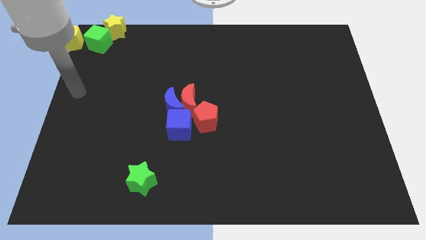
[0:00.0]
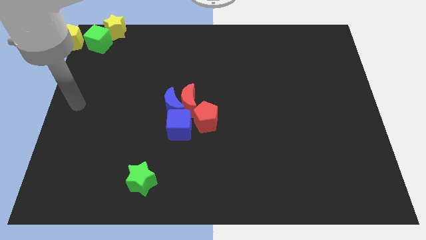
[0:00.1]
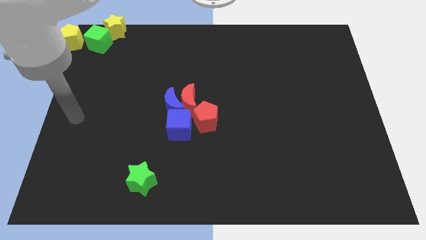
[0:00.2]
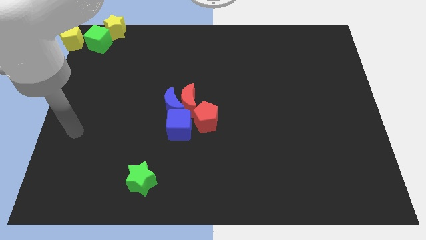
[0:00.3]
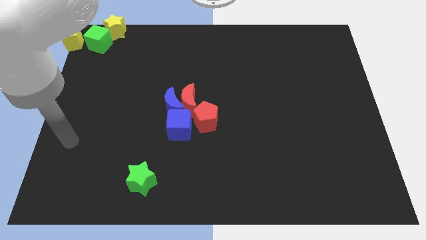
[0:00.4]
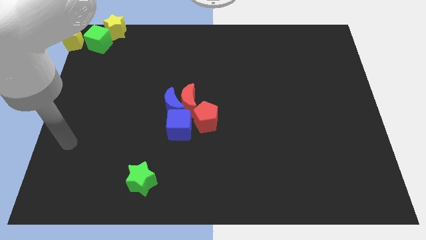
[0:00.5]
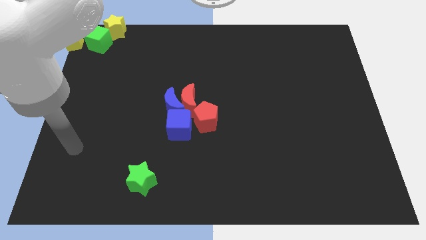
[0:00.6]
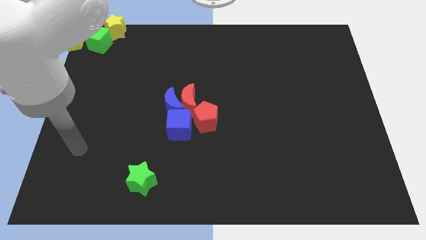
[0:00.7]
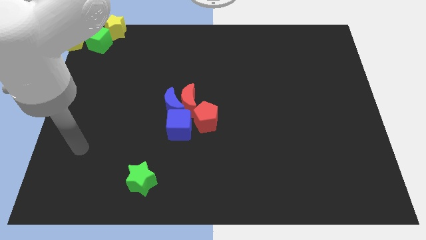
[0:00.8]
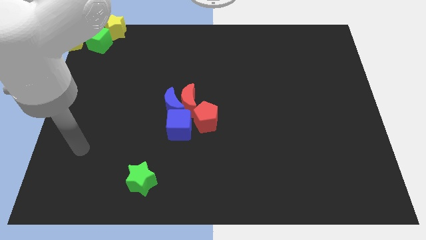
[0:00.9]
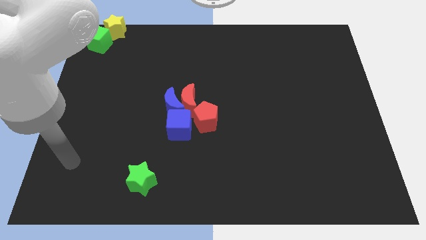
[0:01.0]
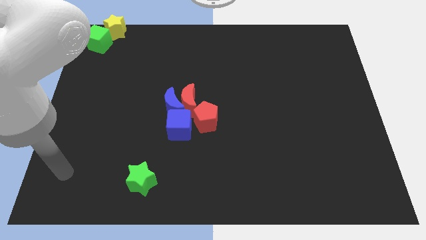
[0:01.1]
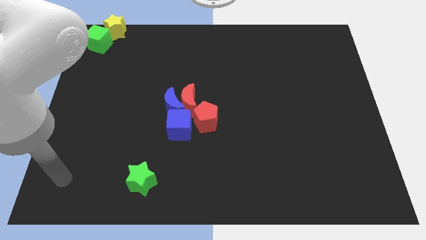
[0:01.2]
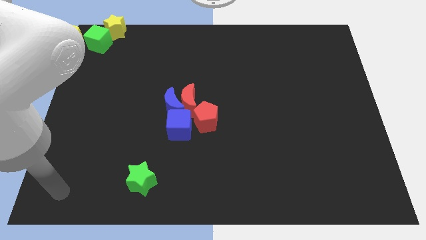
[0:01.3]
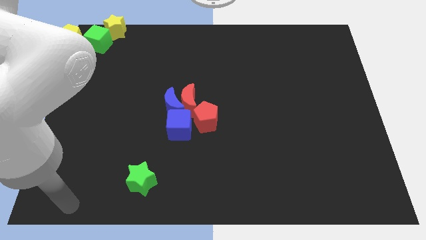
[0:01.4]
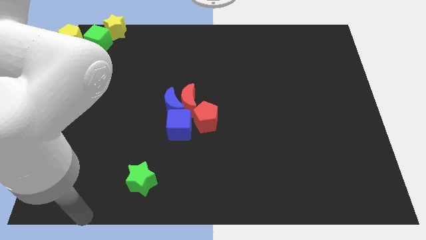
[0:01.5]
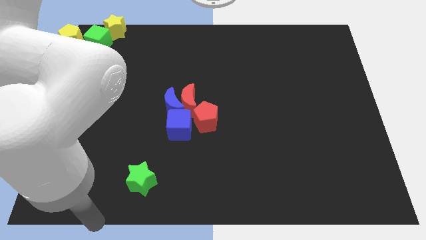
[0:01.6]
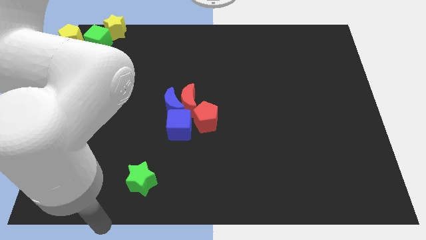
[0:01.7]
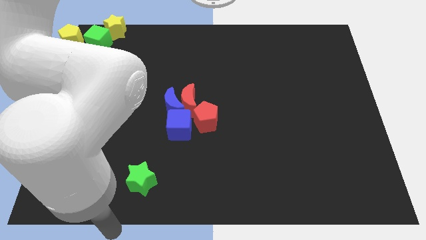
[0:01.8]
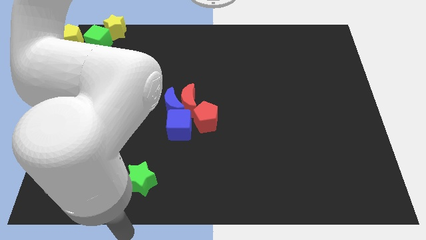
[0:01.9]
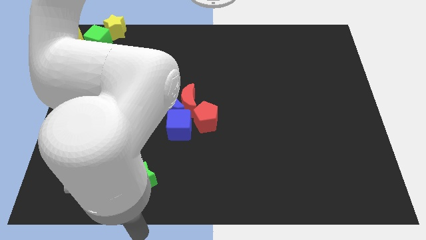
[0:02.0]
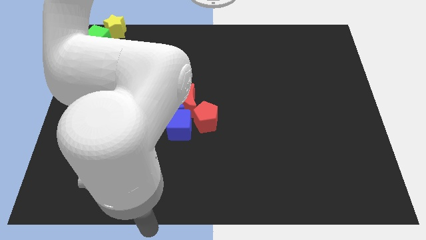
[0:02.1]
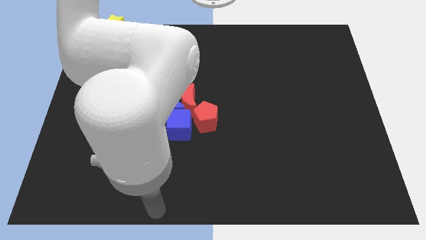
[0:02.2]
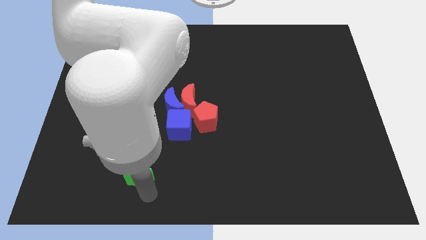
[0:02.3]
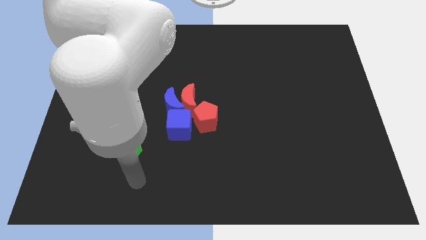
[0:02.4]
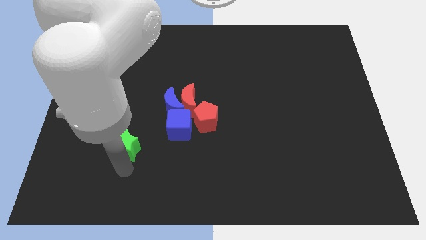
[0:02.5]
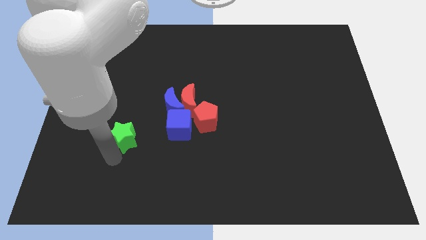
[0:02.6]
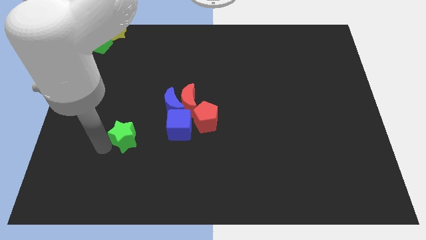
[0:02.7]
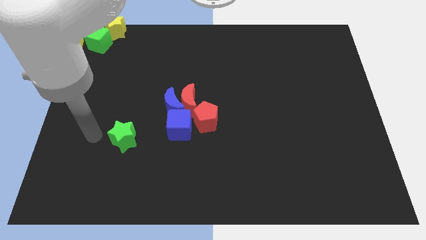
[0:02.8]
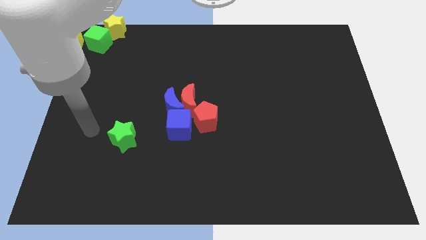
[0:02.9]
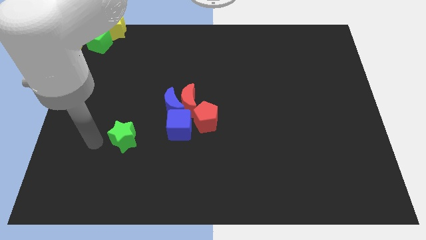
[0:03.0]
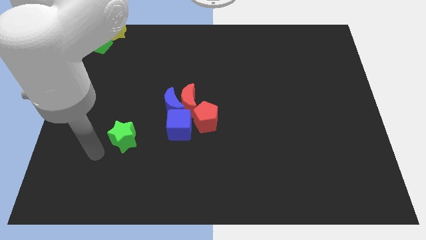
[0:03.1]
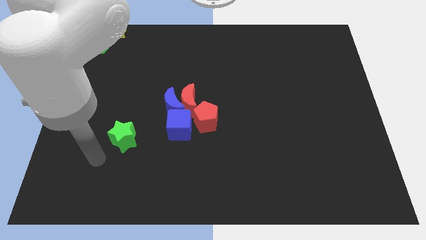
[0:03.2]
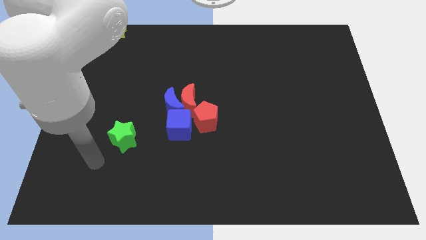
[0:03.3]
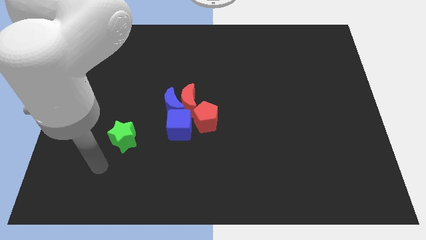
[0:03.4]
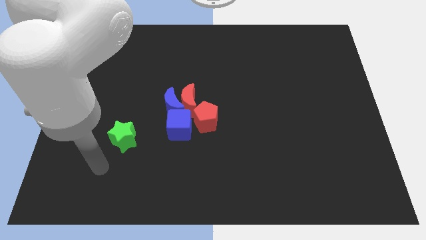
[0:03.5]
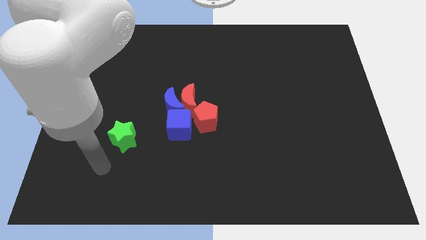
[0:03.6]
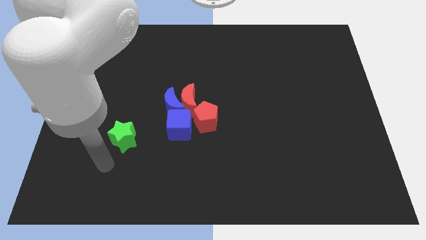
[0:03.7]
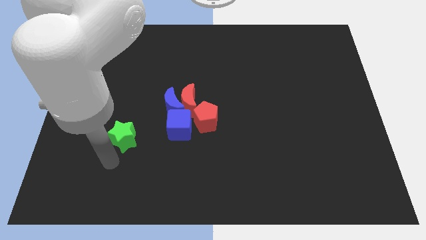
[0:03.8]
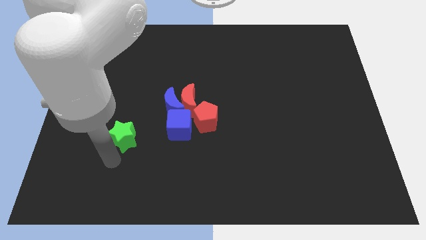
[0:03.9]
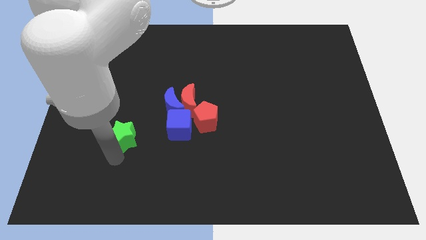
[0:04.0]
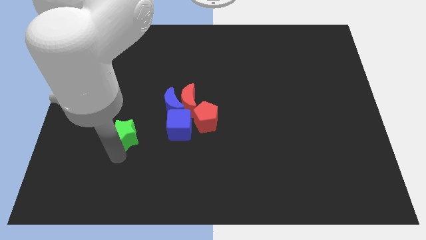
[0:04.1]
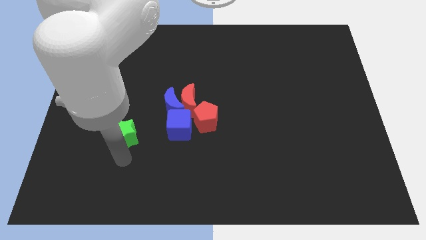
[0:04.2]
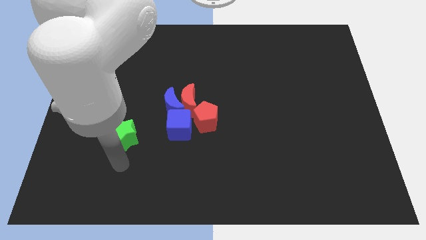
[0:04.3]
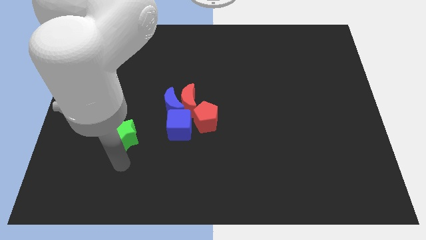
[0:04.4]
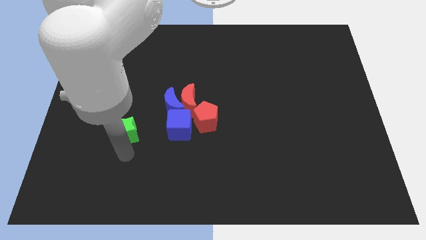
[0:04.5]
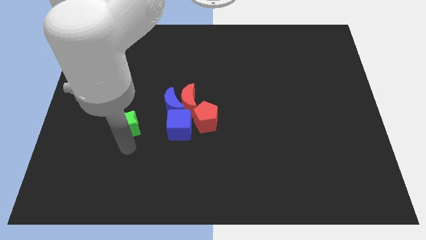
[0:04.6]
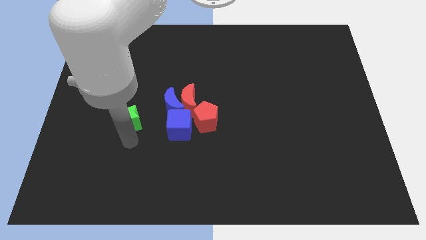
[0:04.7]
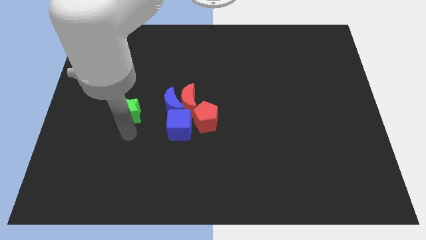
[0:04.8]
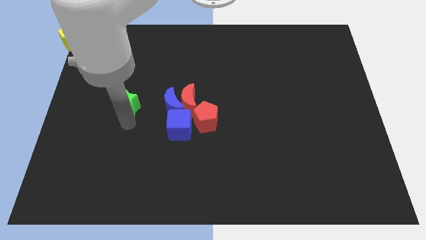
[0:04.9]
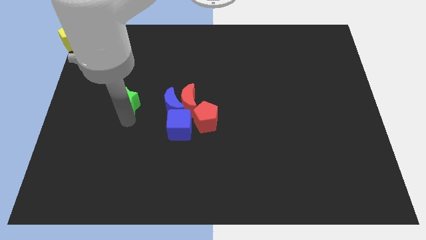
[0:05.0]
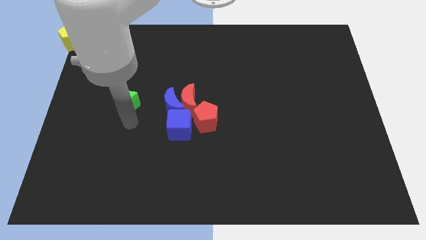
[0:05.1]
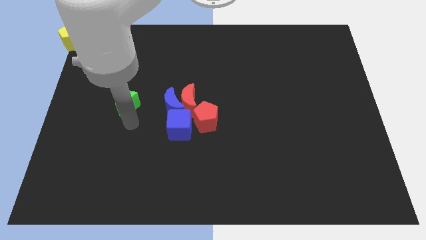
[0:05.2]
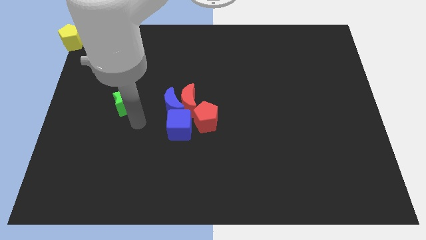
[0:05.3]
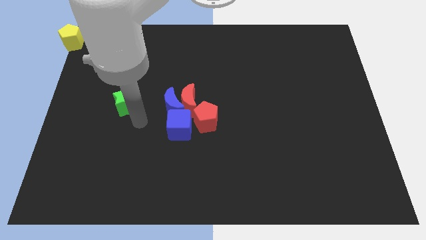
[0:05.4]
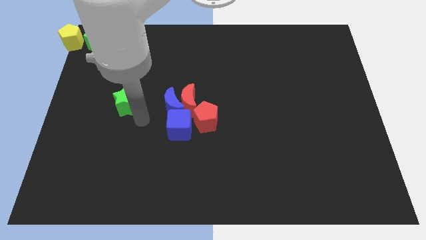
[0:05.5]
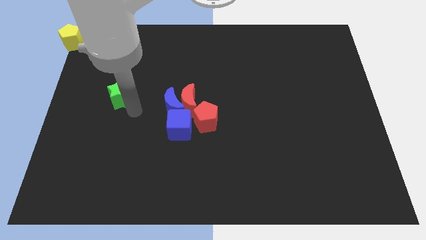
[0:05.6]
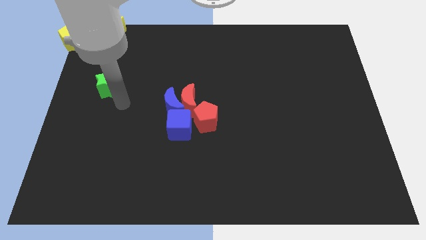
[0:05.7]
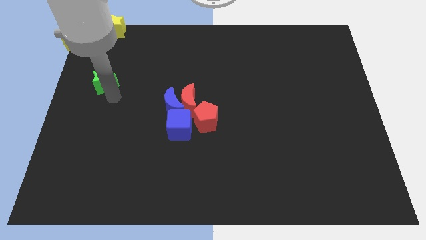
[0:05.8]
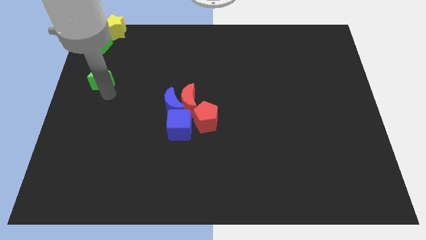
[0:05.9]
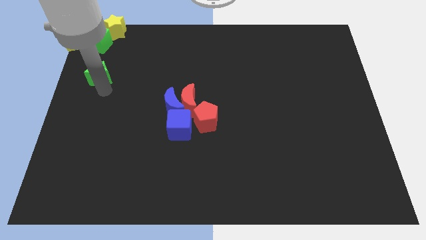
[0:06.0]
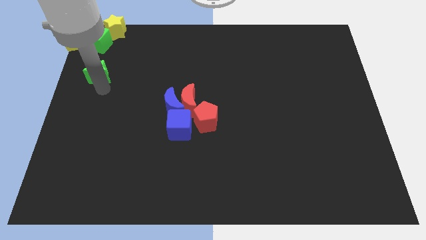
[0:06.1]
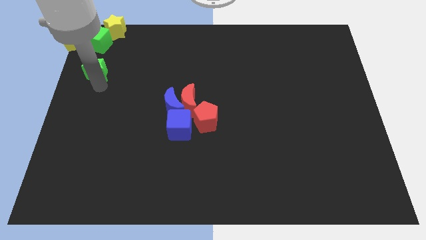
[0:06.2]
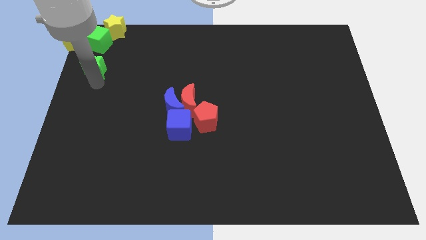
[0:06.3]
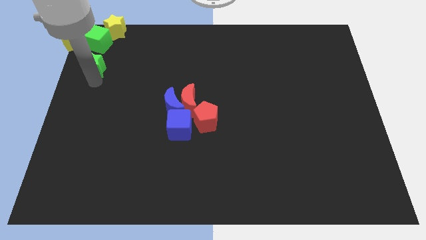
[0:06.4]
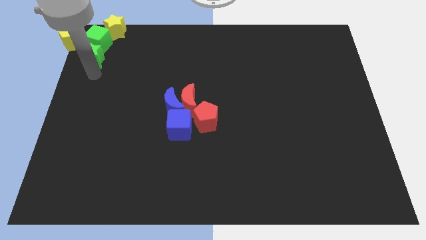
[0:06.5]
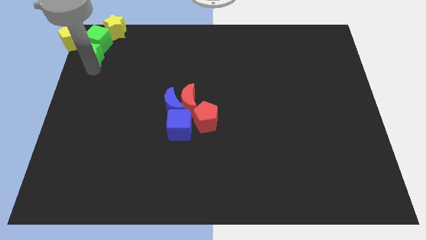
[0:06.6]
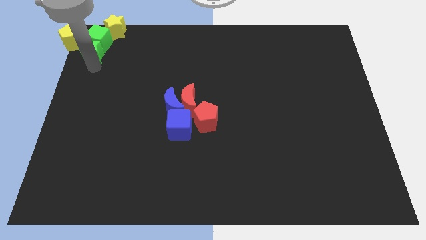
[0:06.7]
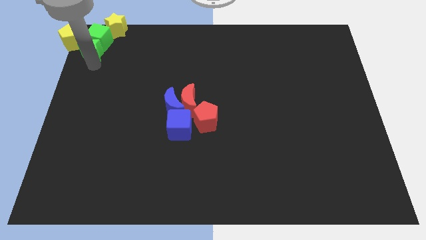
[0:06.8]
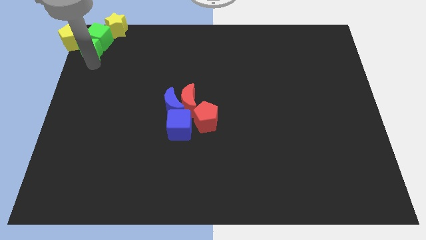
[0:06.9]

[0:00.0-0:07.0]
move green star into green cube

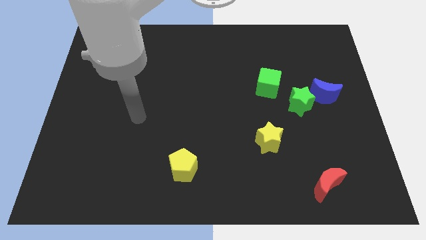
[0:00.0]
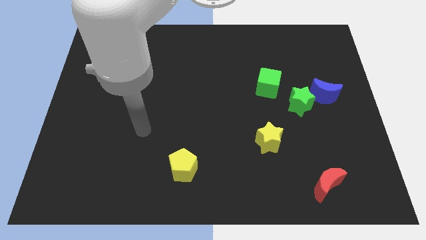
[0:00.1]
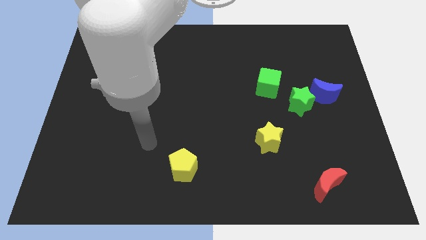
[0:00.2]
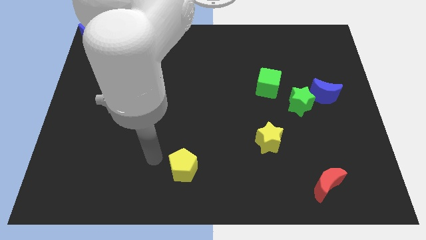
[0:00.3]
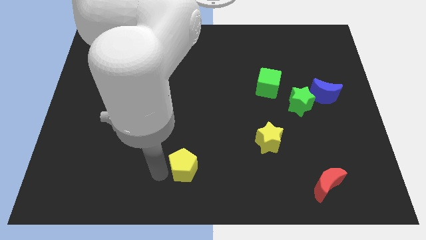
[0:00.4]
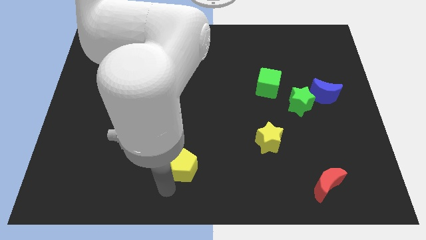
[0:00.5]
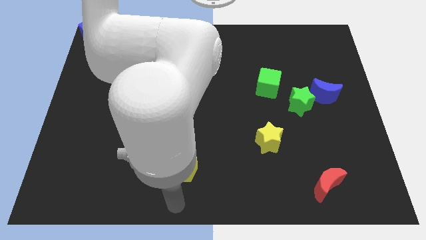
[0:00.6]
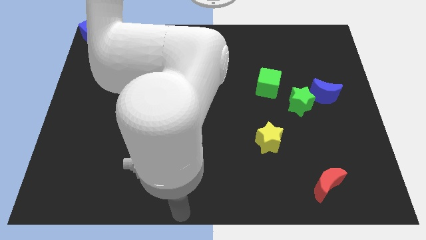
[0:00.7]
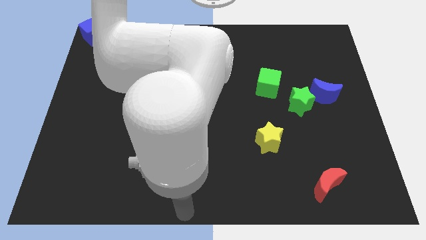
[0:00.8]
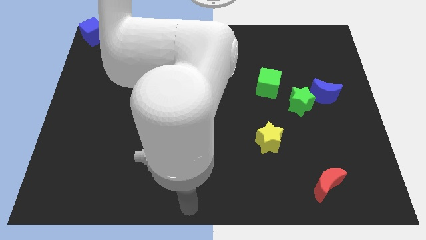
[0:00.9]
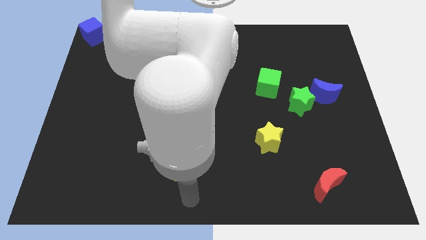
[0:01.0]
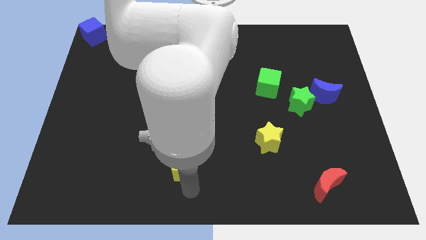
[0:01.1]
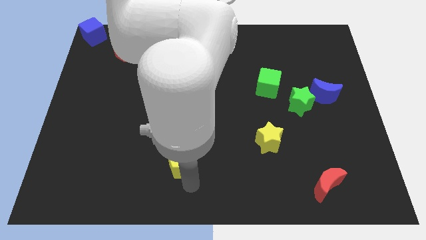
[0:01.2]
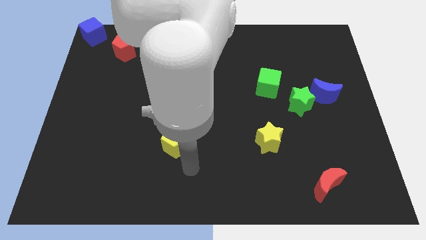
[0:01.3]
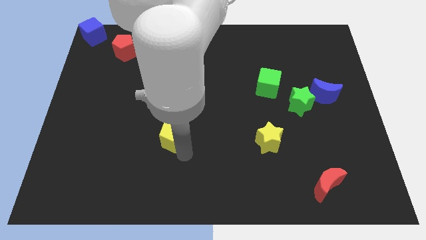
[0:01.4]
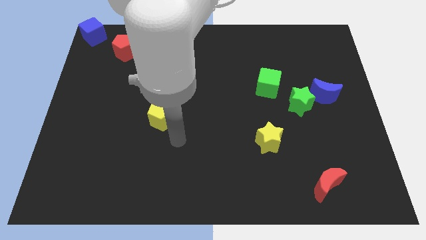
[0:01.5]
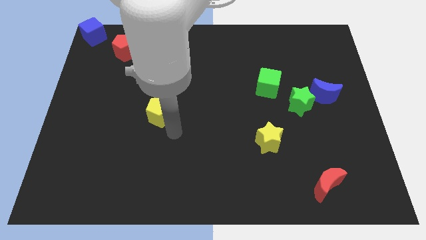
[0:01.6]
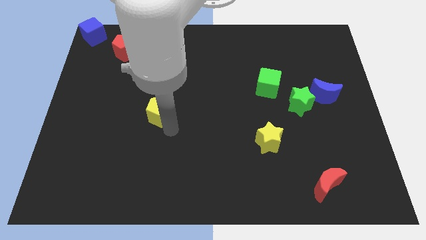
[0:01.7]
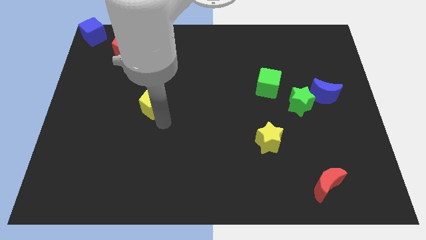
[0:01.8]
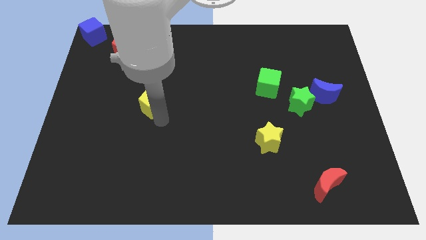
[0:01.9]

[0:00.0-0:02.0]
push the yellow pentagon towards the center
